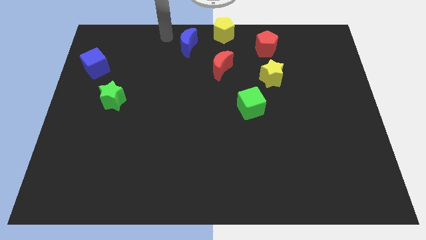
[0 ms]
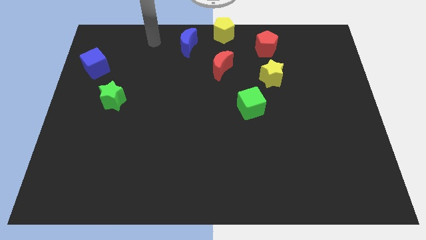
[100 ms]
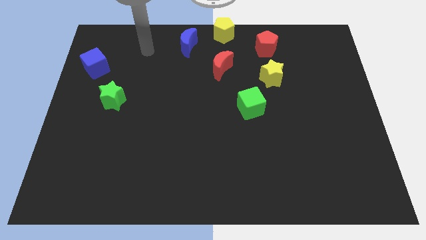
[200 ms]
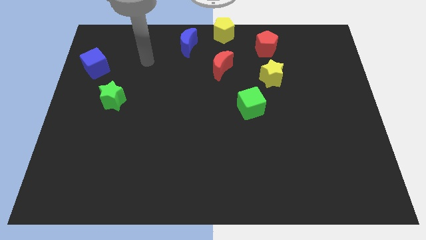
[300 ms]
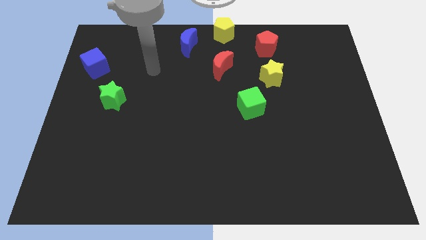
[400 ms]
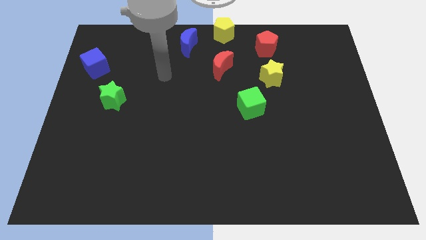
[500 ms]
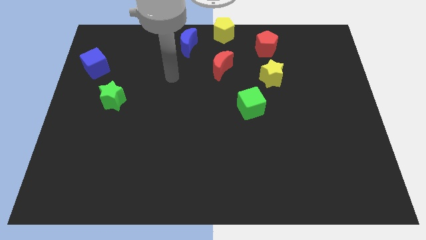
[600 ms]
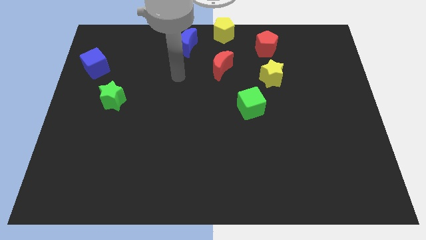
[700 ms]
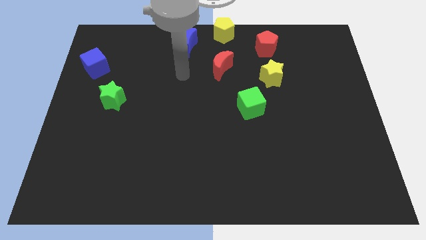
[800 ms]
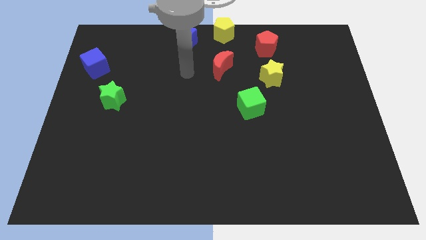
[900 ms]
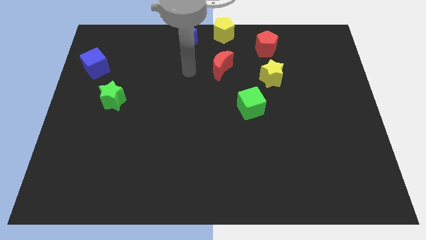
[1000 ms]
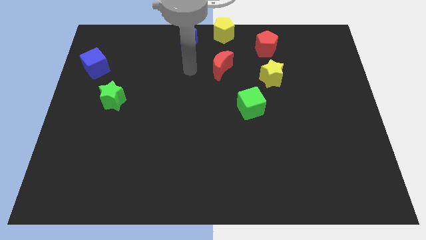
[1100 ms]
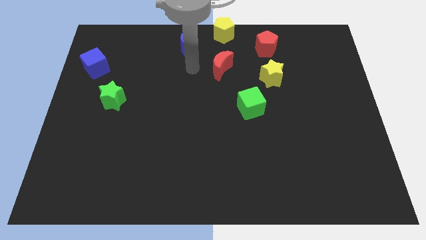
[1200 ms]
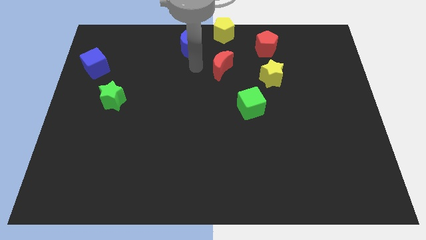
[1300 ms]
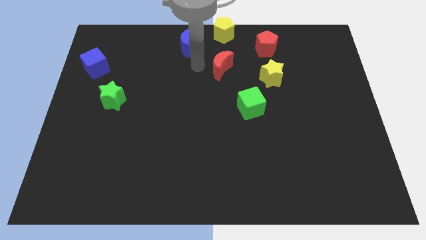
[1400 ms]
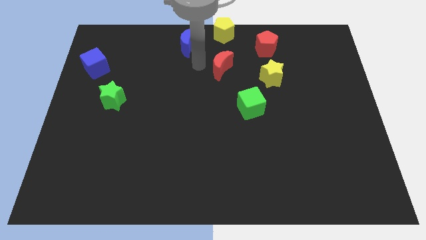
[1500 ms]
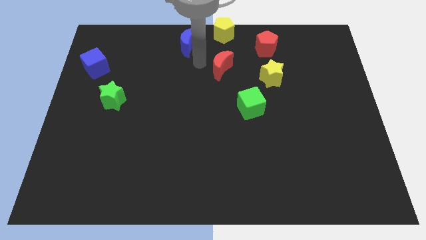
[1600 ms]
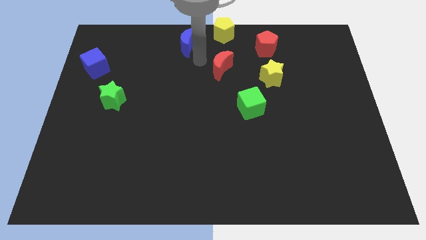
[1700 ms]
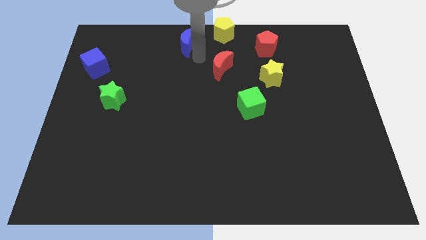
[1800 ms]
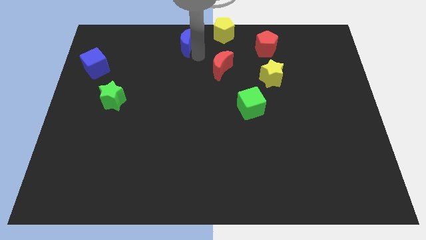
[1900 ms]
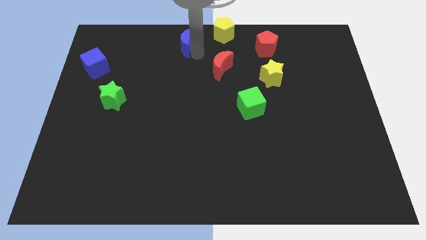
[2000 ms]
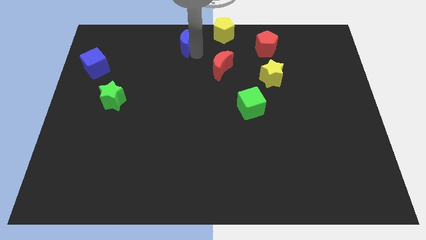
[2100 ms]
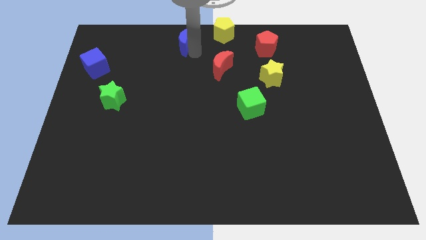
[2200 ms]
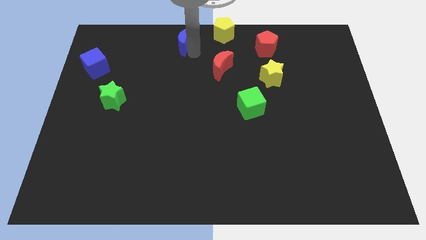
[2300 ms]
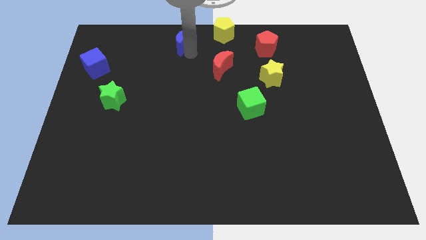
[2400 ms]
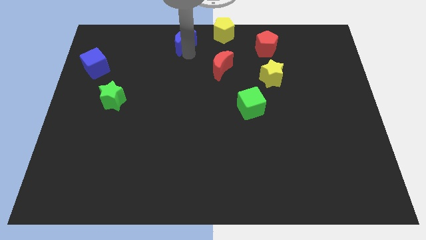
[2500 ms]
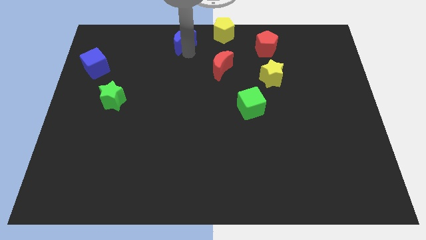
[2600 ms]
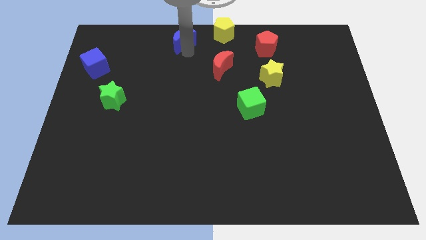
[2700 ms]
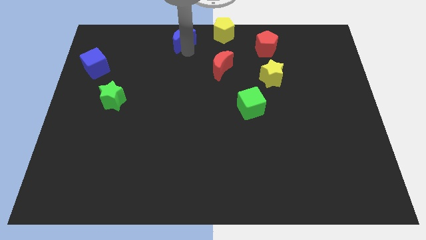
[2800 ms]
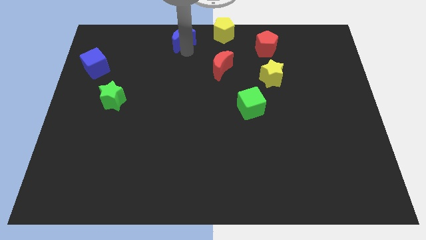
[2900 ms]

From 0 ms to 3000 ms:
push blue crescent slightly upward

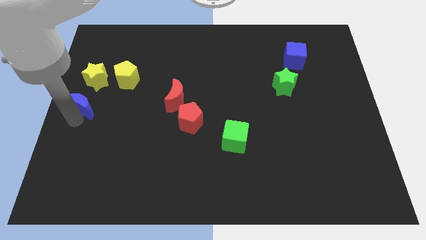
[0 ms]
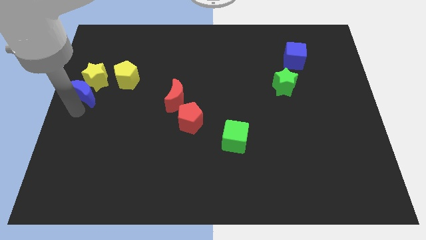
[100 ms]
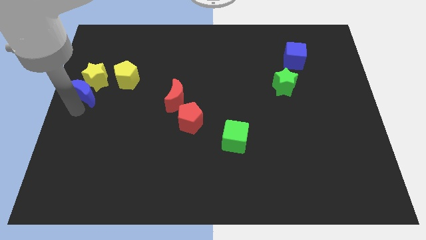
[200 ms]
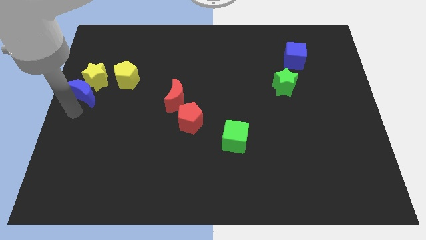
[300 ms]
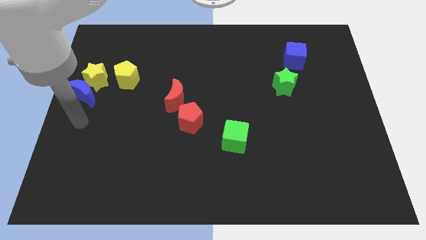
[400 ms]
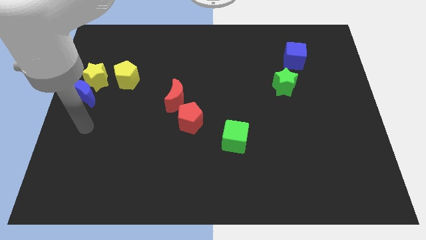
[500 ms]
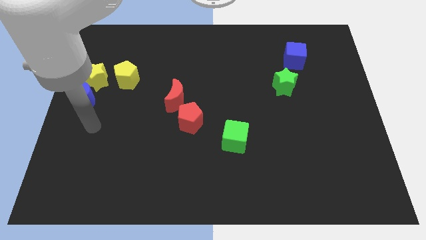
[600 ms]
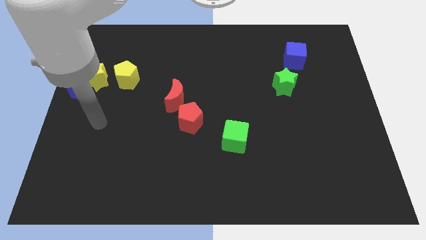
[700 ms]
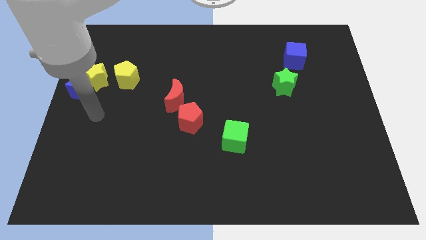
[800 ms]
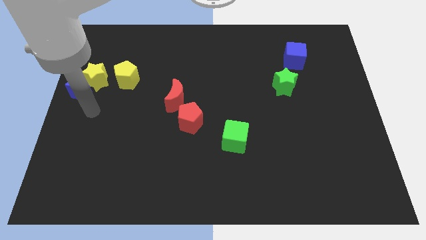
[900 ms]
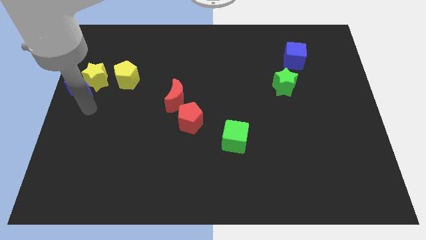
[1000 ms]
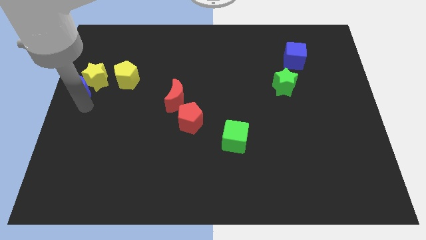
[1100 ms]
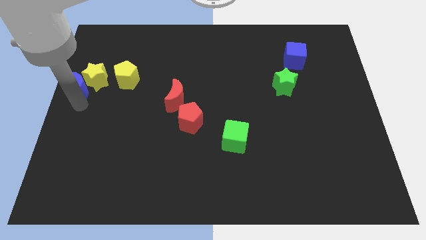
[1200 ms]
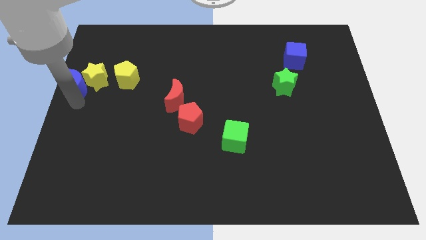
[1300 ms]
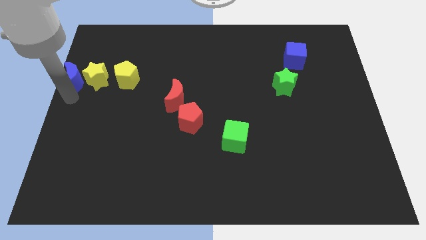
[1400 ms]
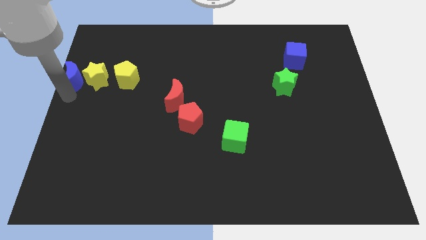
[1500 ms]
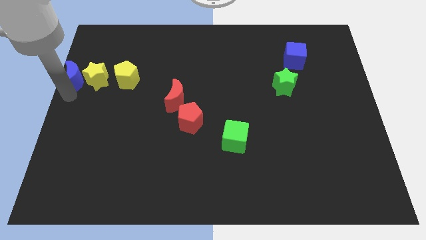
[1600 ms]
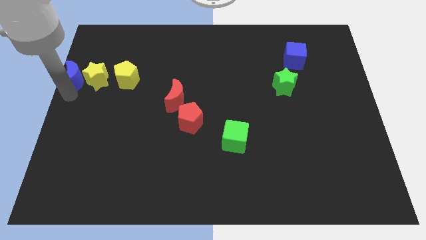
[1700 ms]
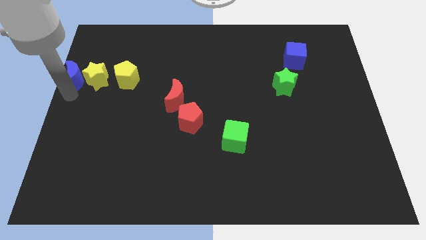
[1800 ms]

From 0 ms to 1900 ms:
move the blue crescent close to the left of the yellow star

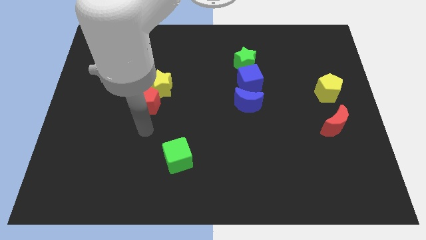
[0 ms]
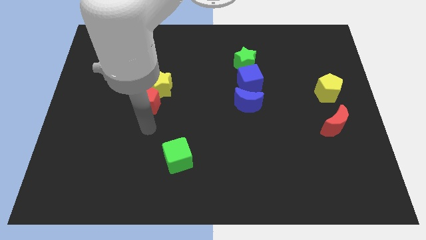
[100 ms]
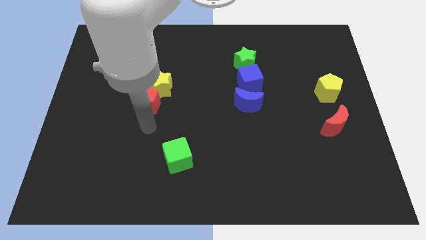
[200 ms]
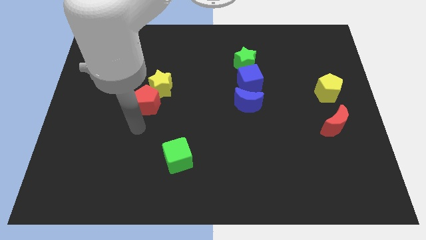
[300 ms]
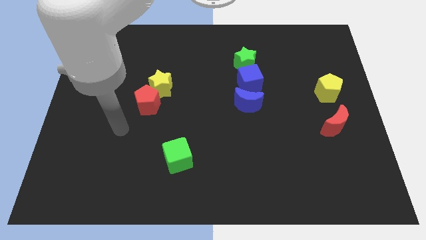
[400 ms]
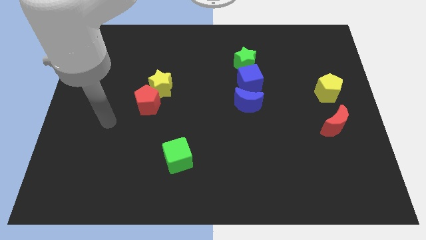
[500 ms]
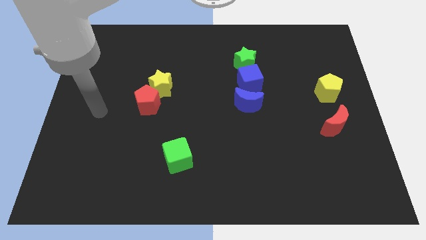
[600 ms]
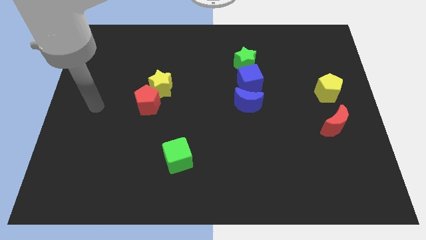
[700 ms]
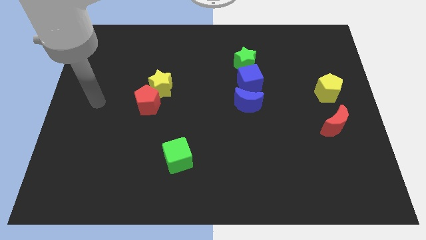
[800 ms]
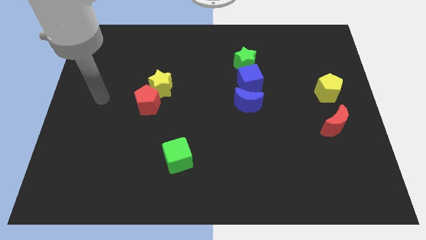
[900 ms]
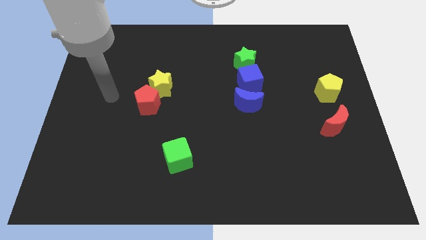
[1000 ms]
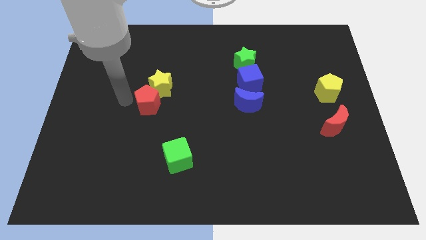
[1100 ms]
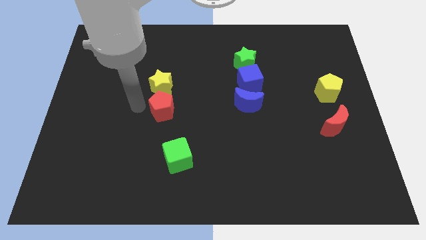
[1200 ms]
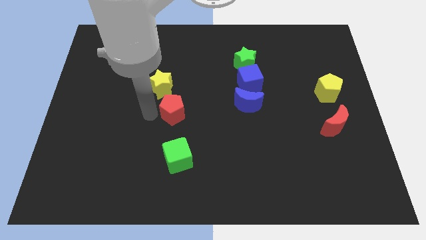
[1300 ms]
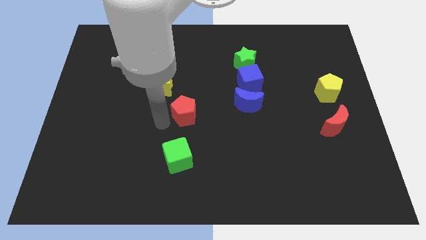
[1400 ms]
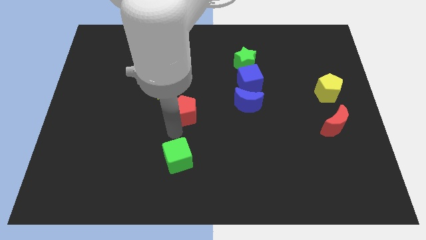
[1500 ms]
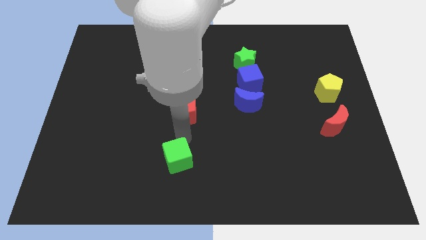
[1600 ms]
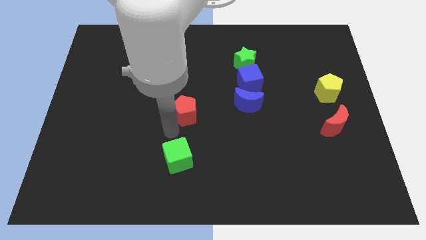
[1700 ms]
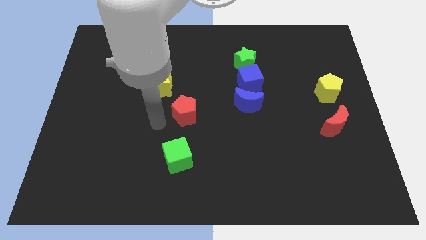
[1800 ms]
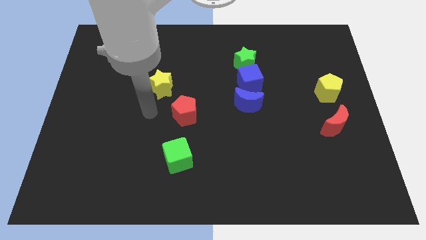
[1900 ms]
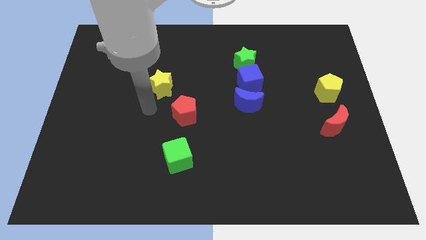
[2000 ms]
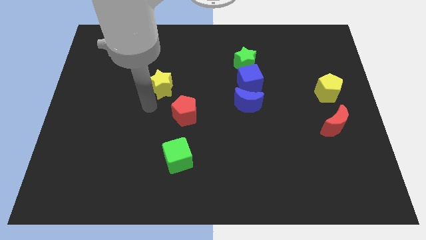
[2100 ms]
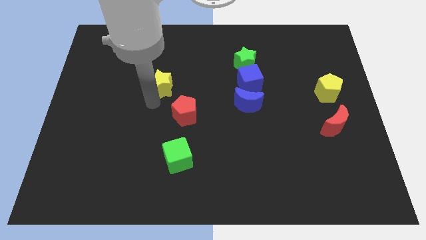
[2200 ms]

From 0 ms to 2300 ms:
separate red pentagon from yellow star

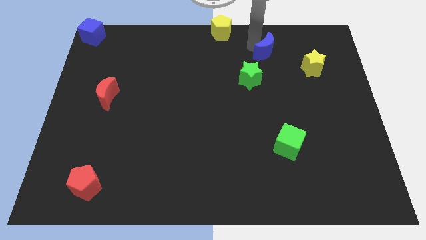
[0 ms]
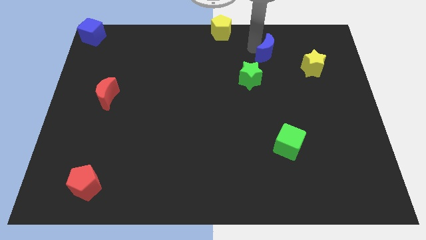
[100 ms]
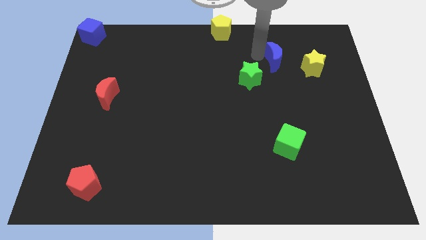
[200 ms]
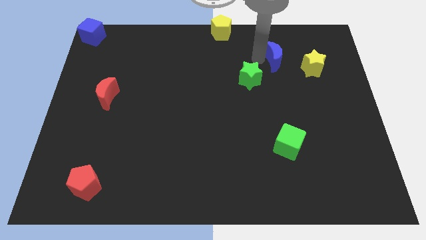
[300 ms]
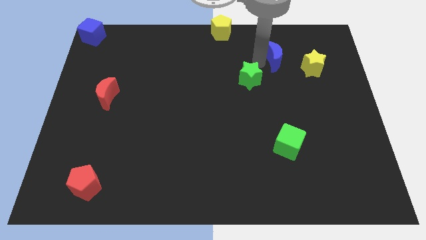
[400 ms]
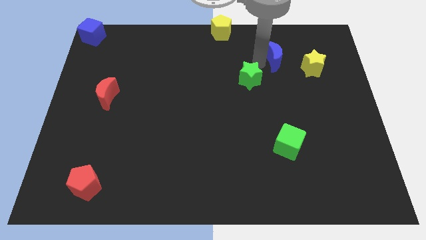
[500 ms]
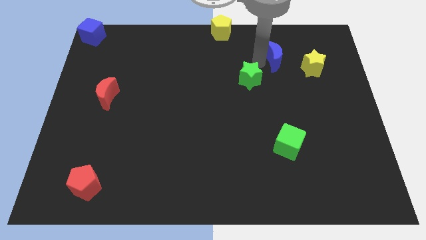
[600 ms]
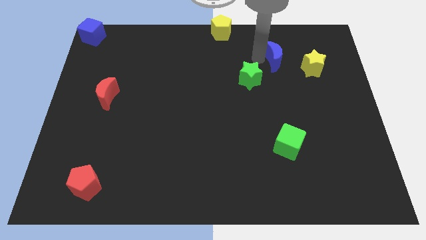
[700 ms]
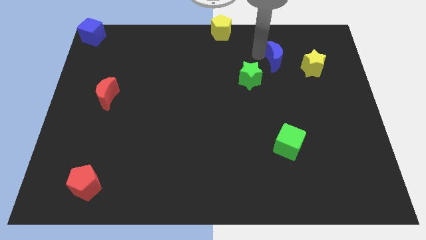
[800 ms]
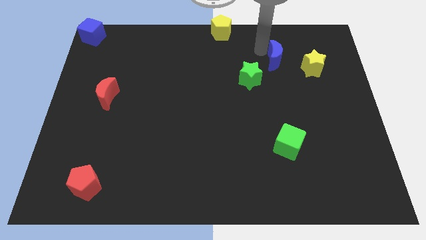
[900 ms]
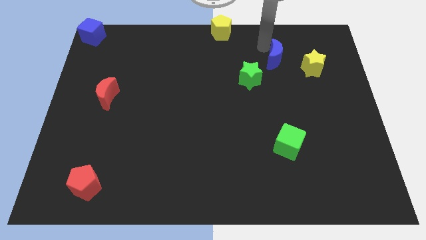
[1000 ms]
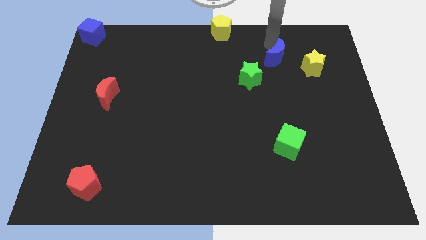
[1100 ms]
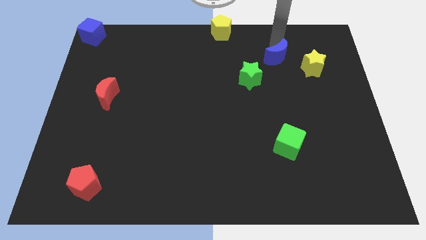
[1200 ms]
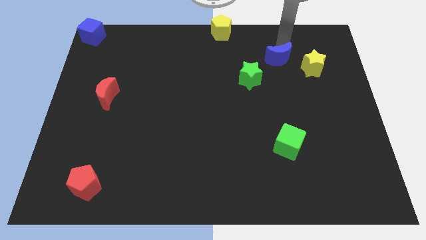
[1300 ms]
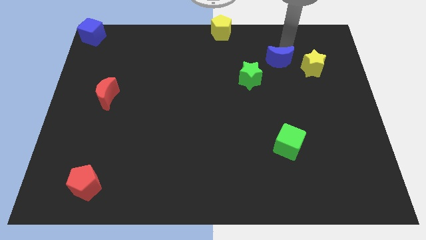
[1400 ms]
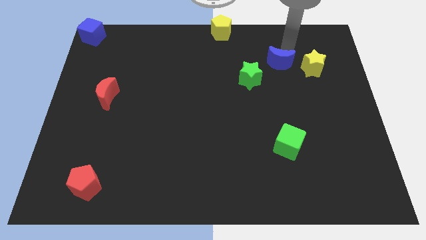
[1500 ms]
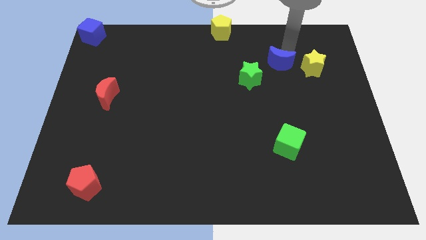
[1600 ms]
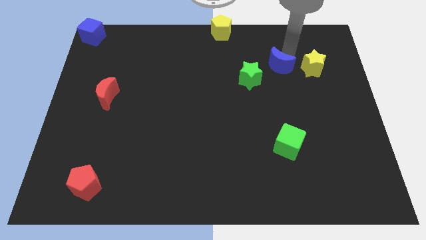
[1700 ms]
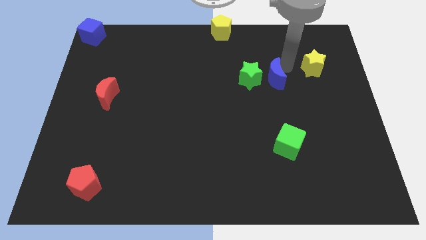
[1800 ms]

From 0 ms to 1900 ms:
move blue moon between green star and yellow star
